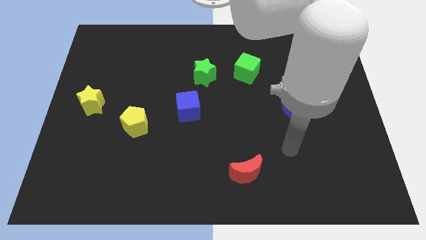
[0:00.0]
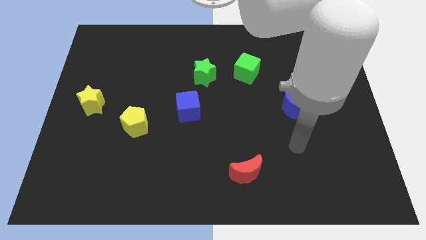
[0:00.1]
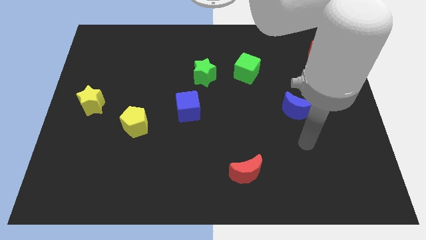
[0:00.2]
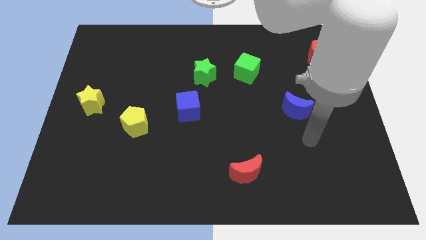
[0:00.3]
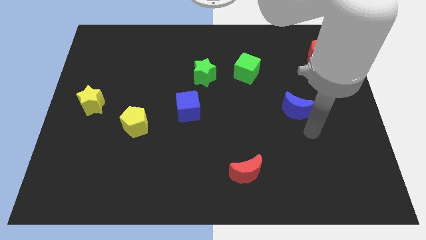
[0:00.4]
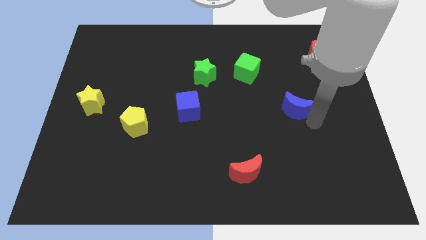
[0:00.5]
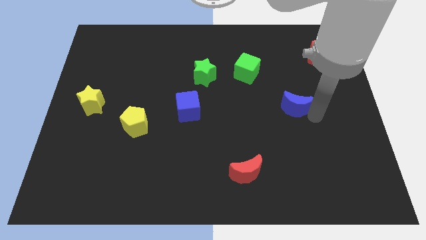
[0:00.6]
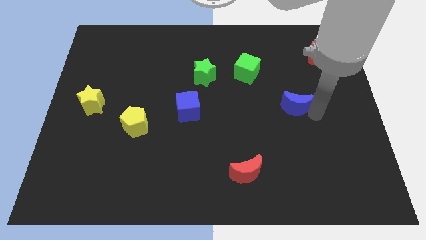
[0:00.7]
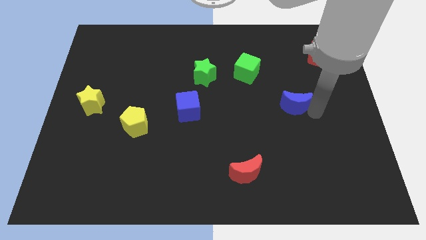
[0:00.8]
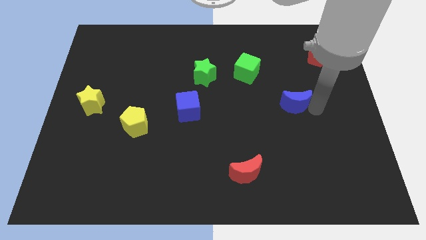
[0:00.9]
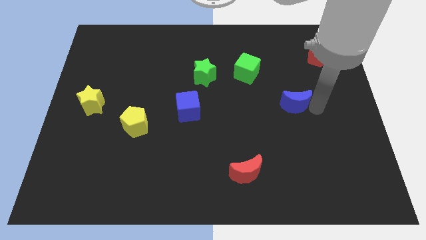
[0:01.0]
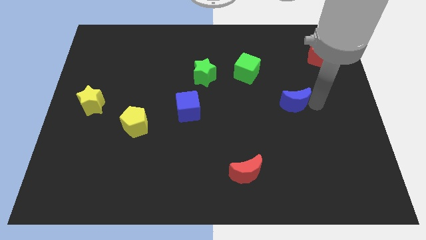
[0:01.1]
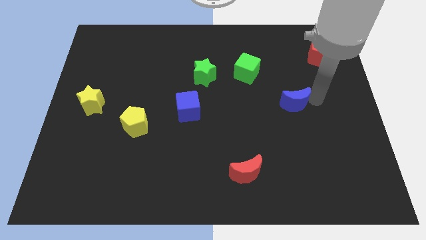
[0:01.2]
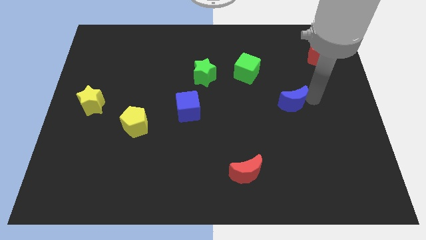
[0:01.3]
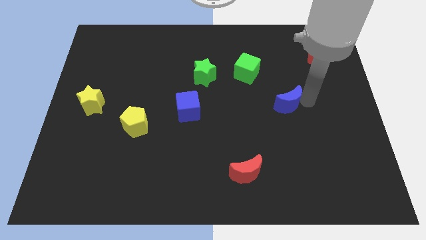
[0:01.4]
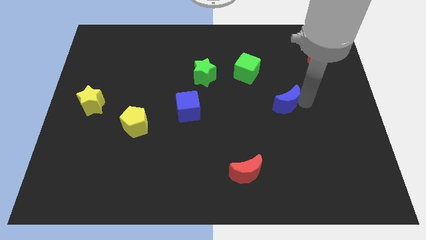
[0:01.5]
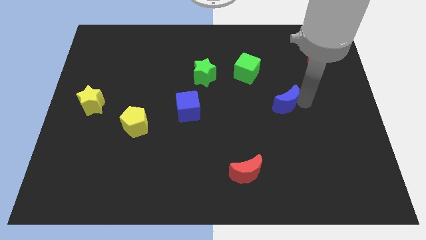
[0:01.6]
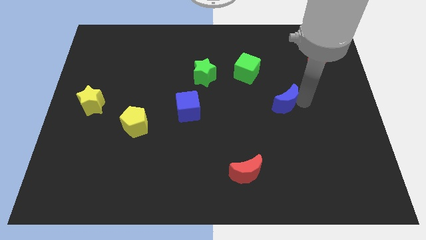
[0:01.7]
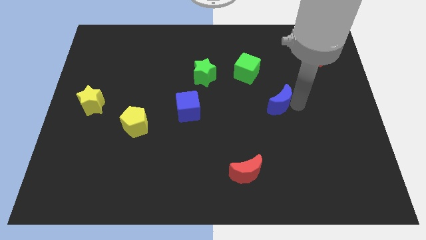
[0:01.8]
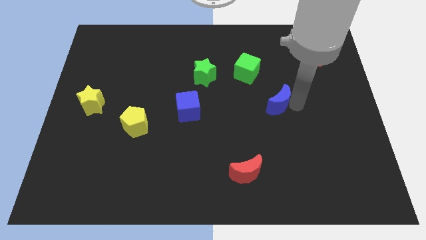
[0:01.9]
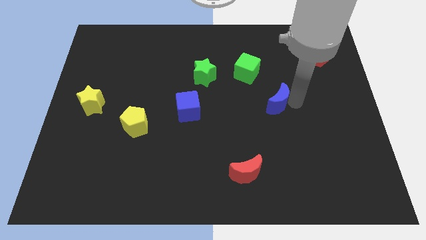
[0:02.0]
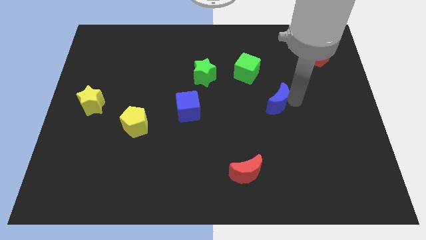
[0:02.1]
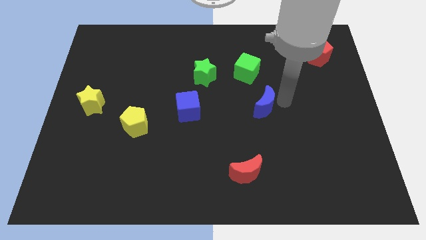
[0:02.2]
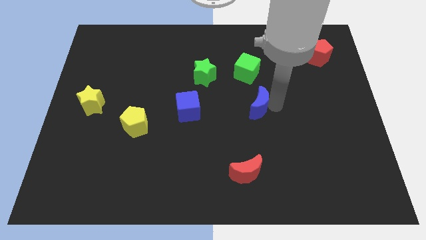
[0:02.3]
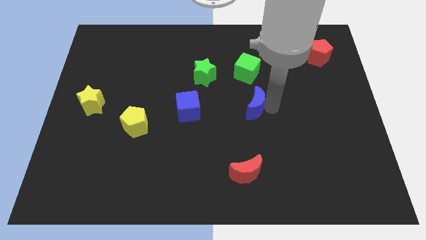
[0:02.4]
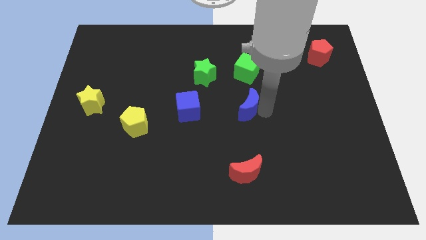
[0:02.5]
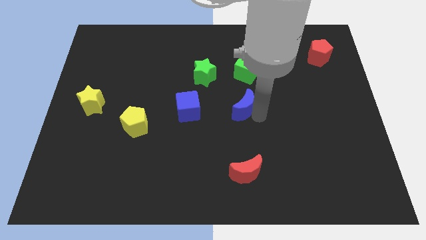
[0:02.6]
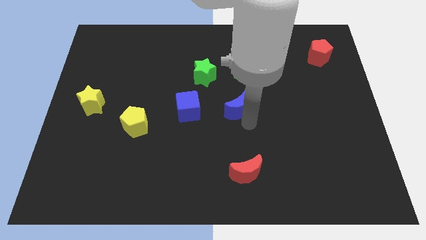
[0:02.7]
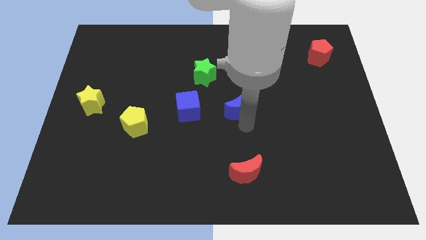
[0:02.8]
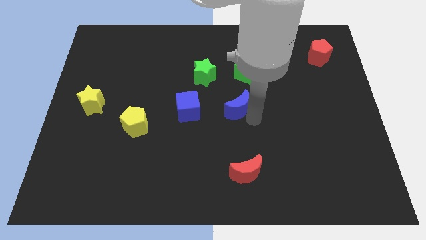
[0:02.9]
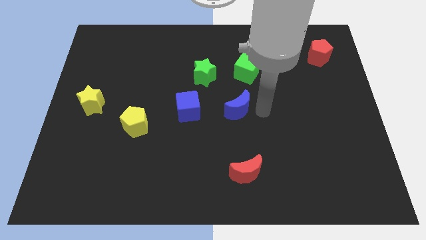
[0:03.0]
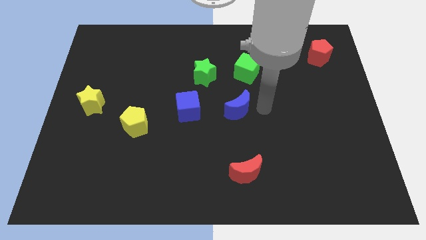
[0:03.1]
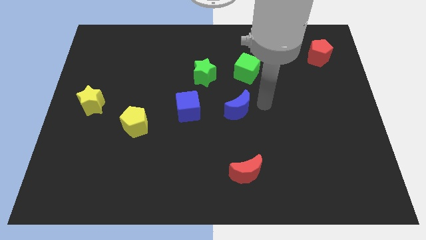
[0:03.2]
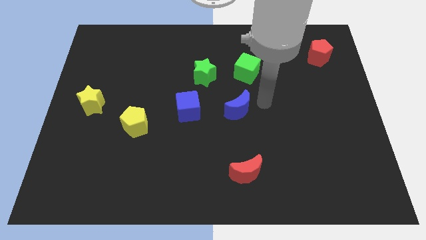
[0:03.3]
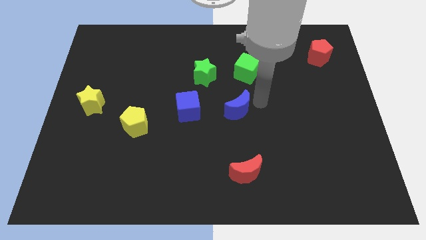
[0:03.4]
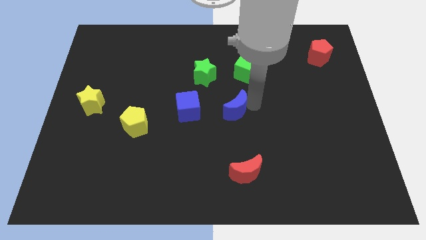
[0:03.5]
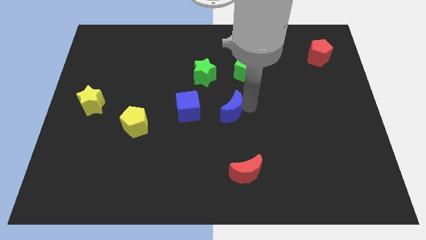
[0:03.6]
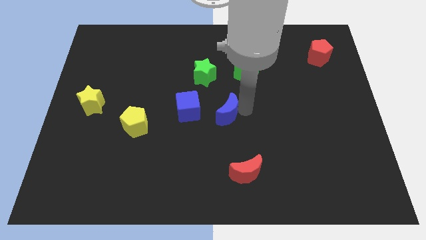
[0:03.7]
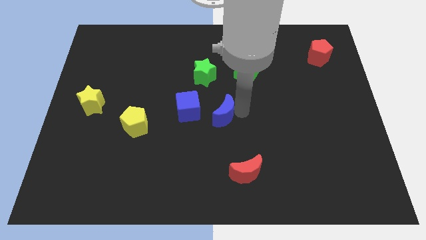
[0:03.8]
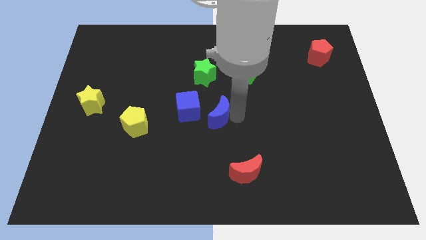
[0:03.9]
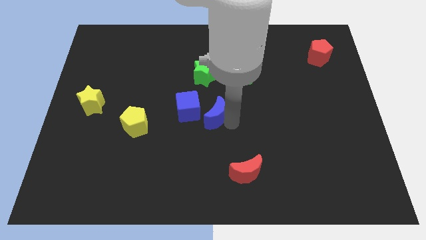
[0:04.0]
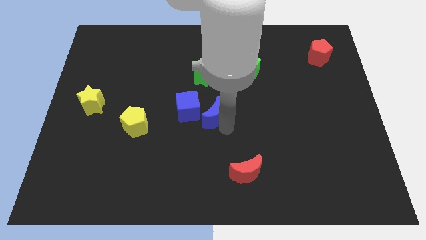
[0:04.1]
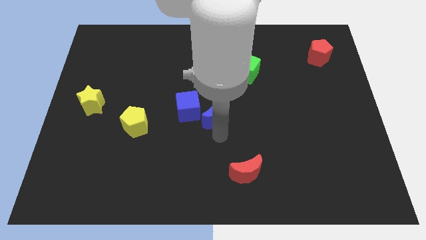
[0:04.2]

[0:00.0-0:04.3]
drag the blue moon into the blue cube

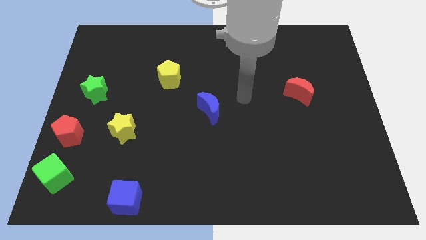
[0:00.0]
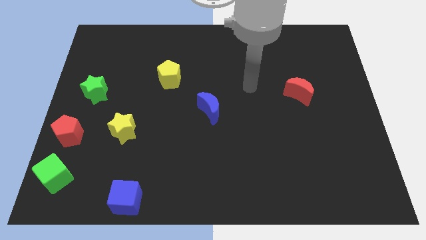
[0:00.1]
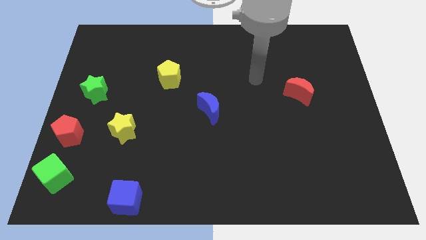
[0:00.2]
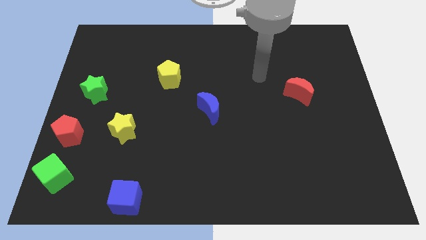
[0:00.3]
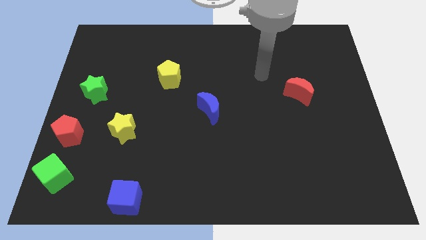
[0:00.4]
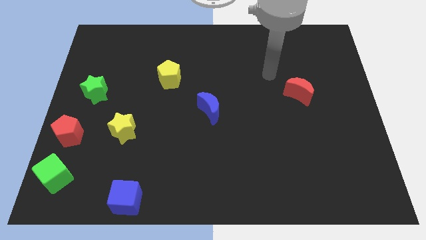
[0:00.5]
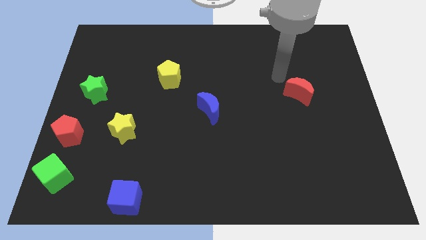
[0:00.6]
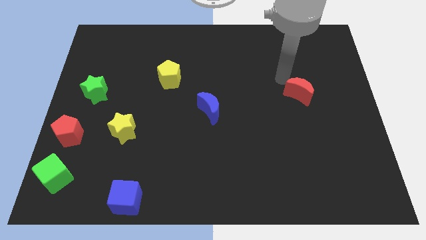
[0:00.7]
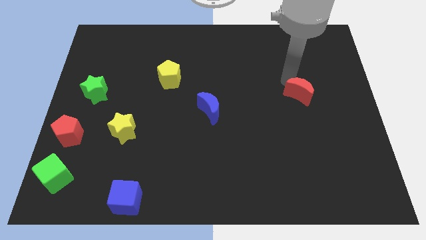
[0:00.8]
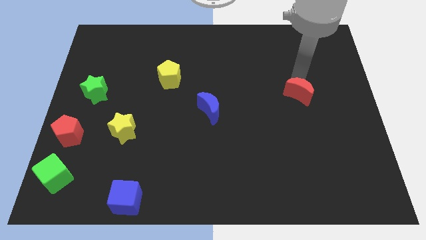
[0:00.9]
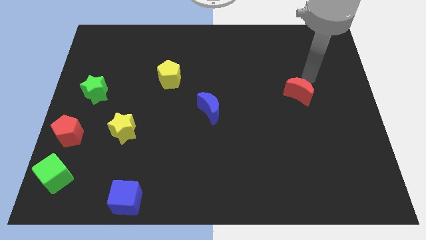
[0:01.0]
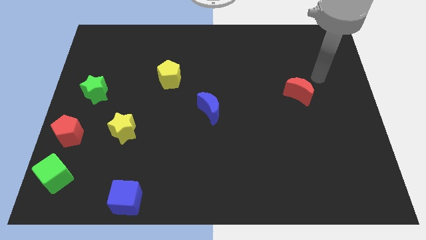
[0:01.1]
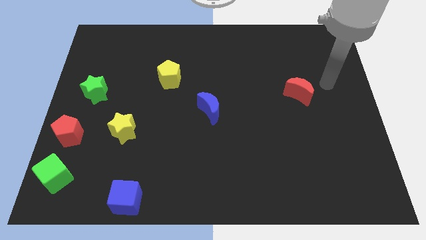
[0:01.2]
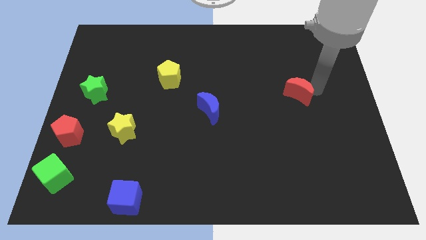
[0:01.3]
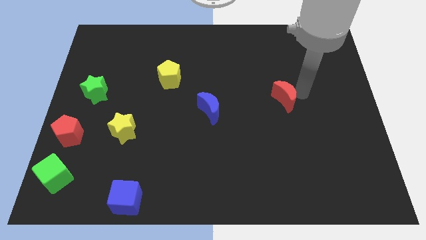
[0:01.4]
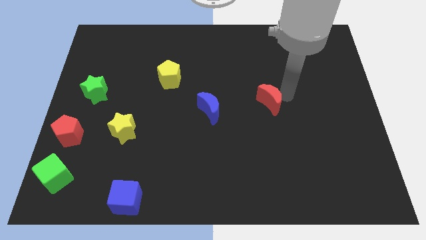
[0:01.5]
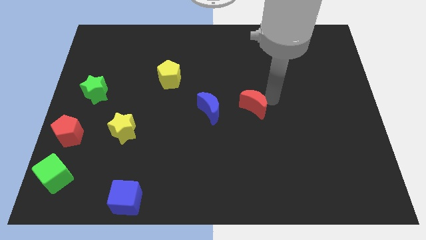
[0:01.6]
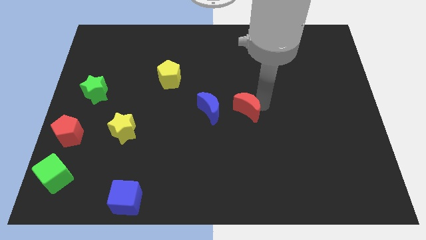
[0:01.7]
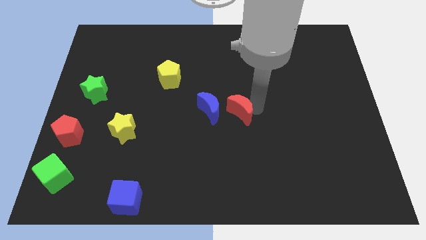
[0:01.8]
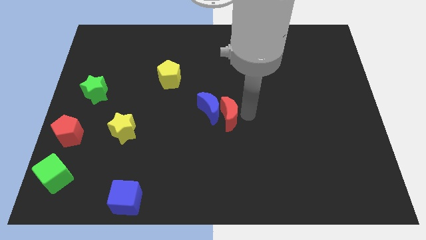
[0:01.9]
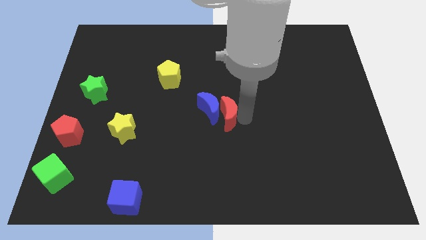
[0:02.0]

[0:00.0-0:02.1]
push the red crescent to the right of the blue crescent

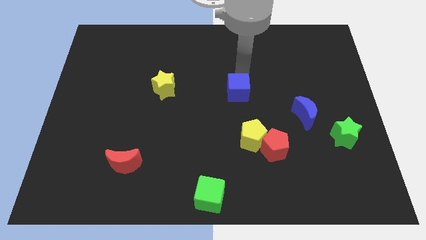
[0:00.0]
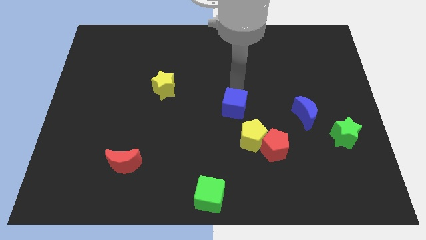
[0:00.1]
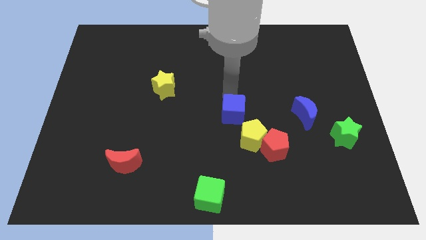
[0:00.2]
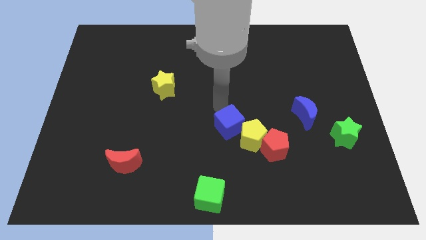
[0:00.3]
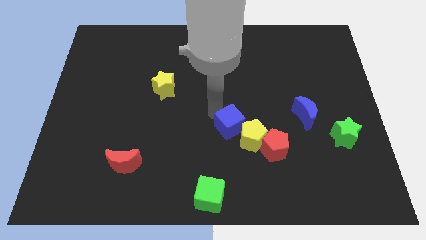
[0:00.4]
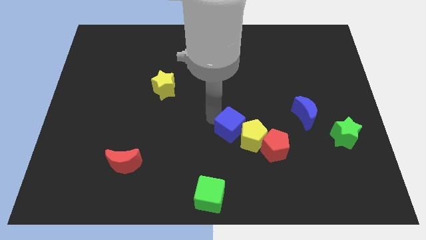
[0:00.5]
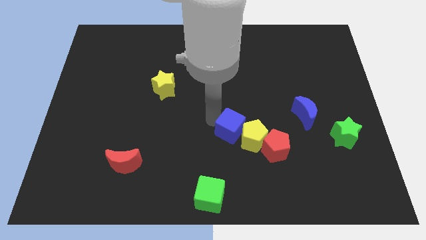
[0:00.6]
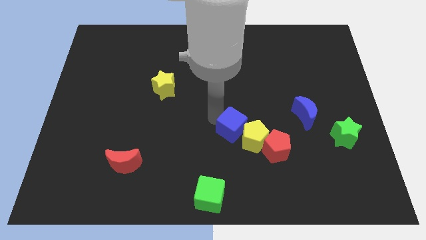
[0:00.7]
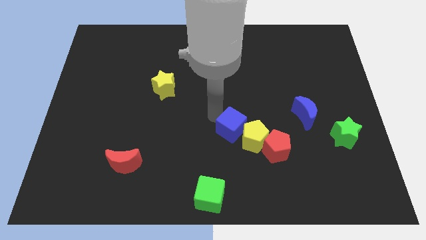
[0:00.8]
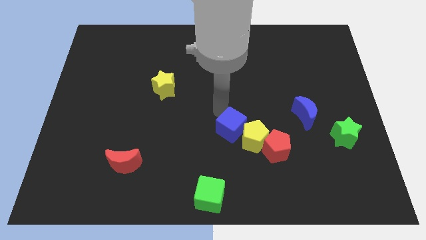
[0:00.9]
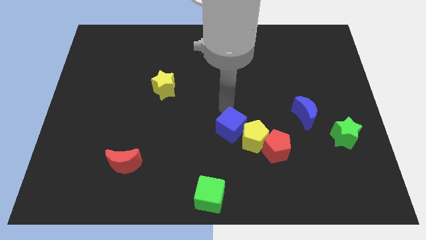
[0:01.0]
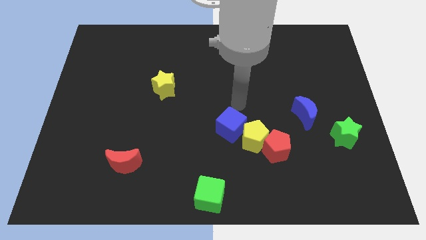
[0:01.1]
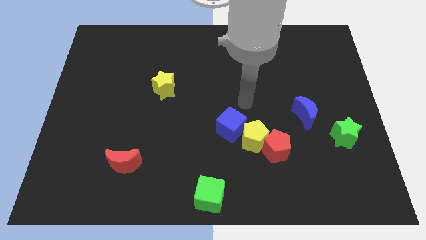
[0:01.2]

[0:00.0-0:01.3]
push the blue cube into the left side of the yellow pentagon

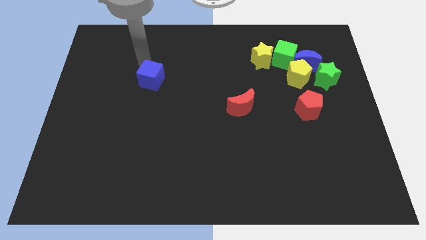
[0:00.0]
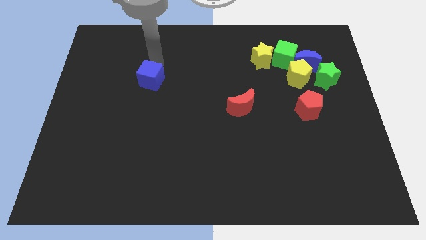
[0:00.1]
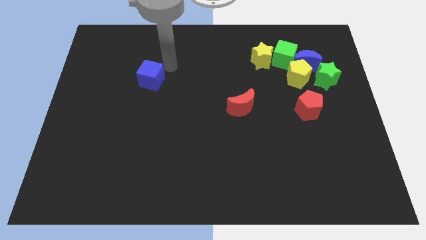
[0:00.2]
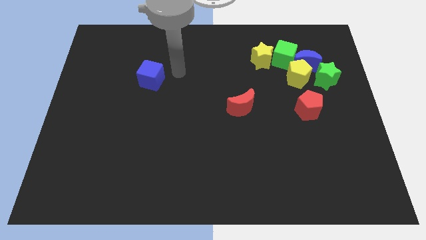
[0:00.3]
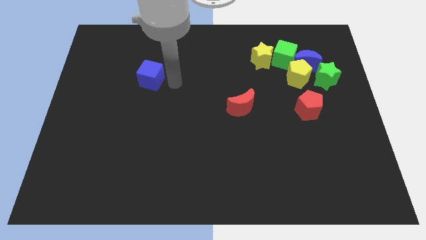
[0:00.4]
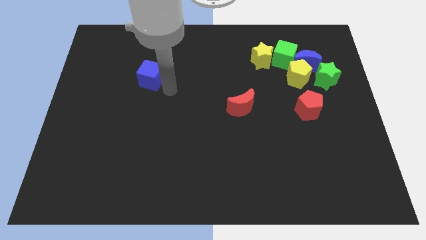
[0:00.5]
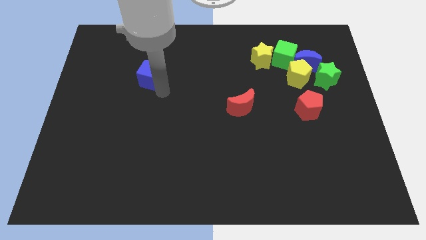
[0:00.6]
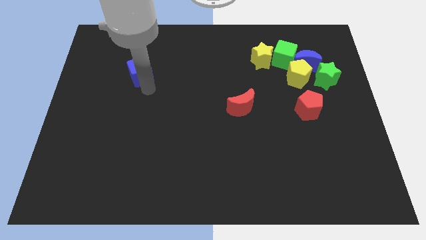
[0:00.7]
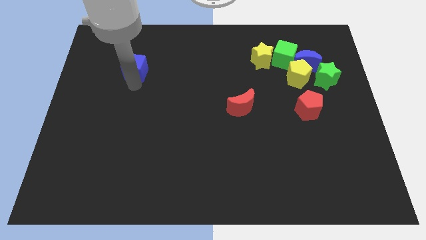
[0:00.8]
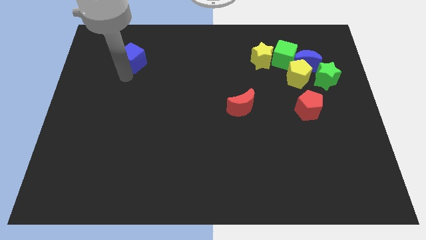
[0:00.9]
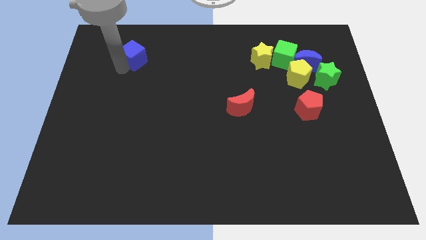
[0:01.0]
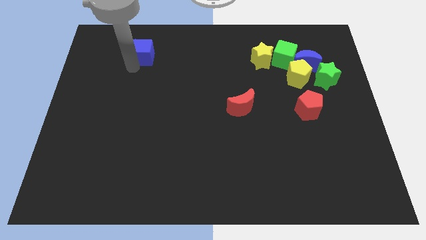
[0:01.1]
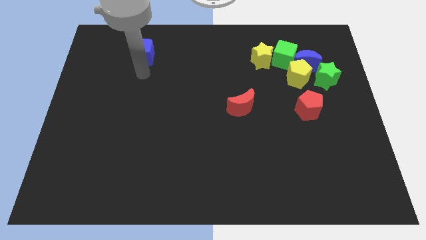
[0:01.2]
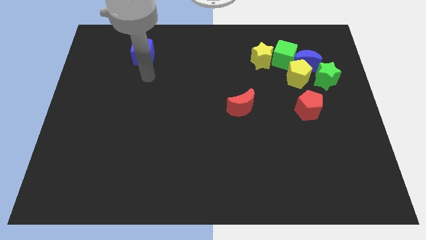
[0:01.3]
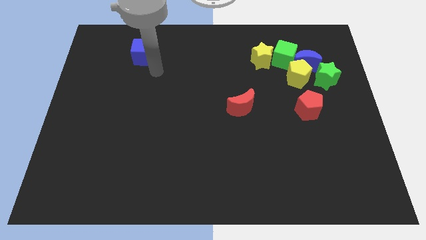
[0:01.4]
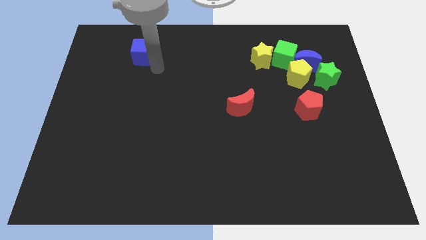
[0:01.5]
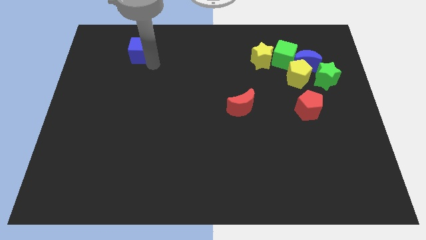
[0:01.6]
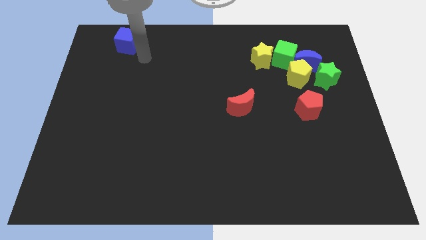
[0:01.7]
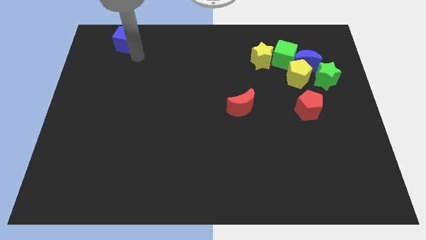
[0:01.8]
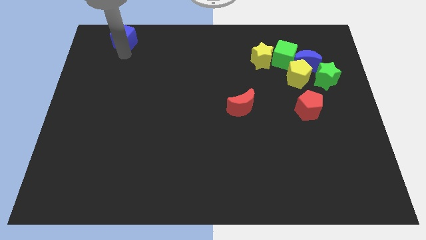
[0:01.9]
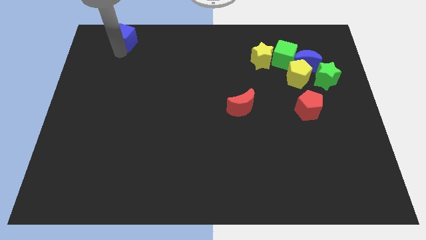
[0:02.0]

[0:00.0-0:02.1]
move the blue cube towards the top left of the board
